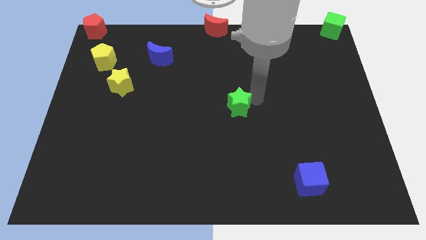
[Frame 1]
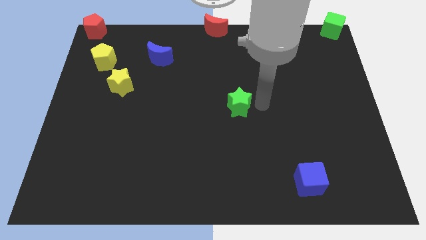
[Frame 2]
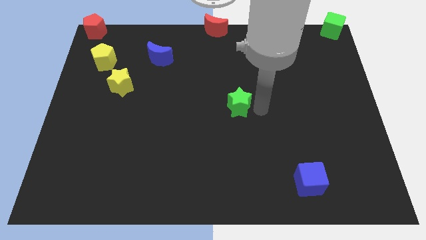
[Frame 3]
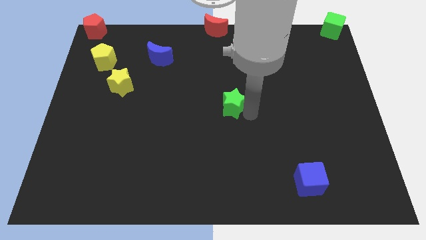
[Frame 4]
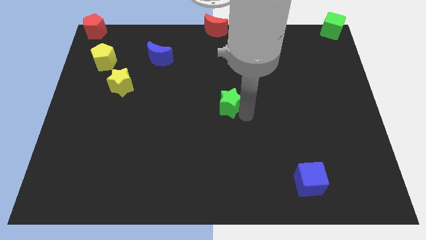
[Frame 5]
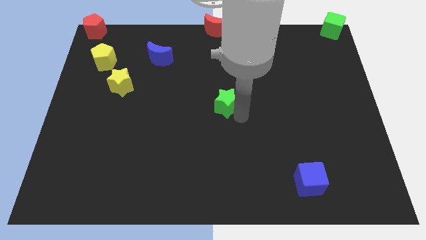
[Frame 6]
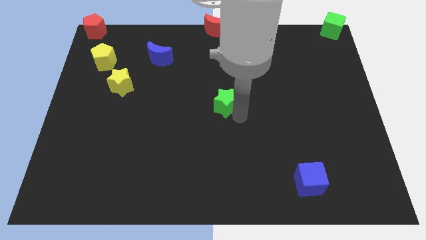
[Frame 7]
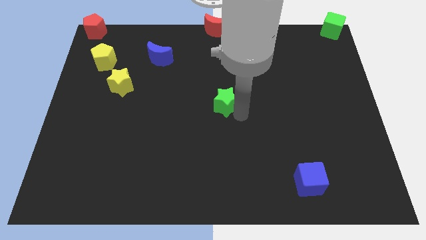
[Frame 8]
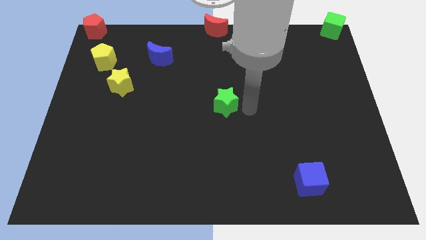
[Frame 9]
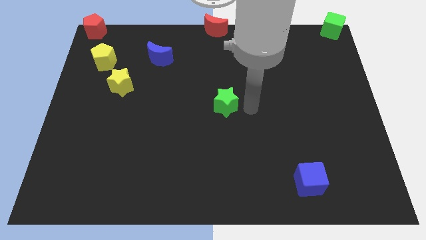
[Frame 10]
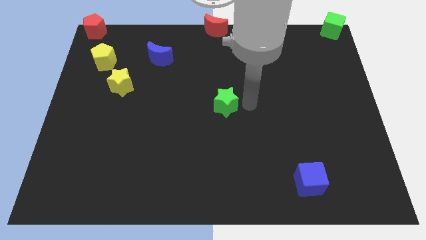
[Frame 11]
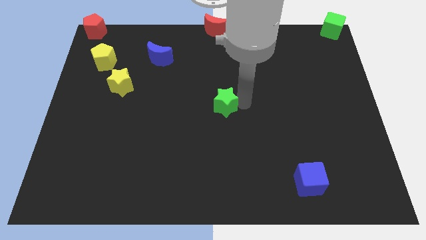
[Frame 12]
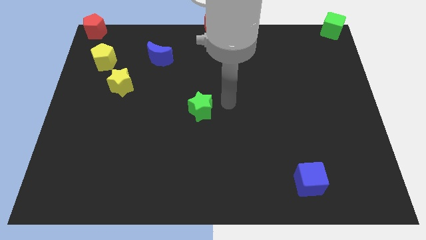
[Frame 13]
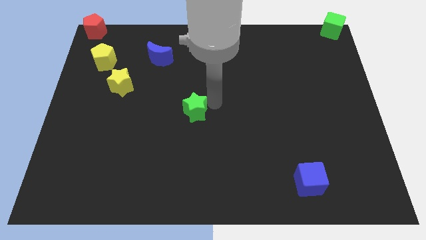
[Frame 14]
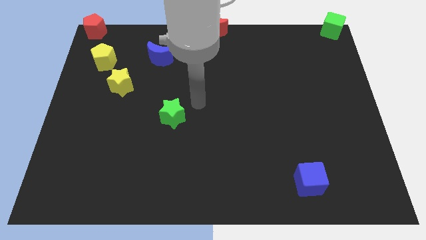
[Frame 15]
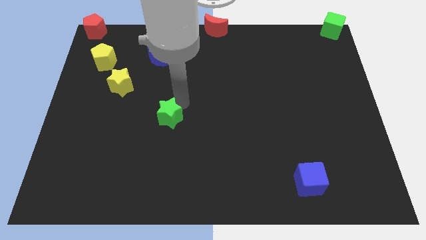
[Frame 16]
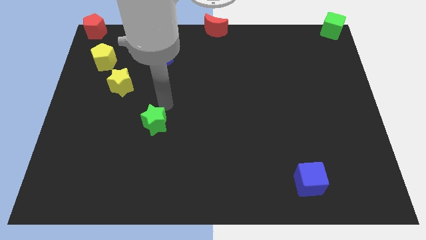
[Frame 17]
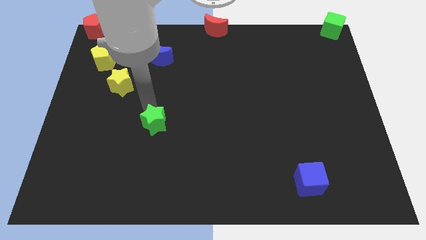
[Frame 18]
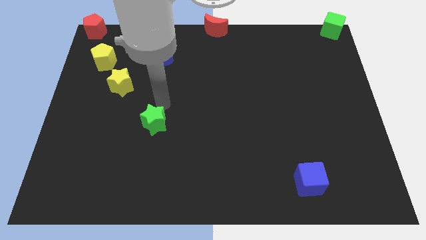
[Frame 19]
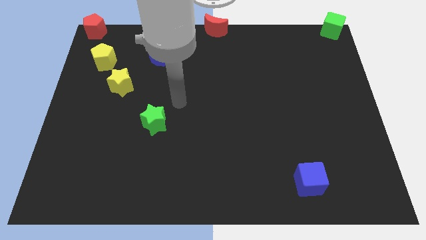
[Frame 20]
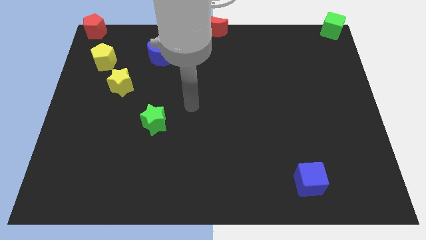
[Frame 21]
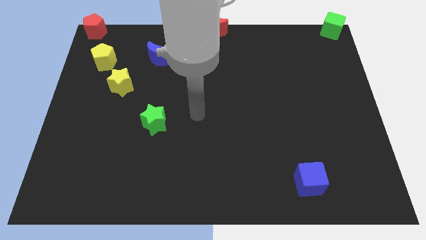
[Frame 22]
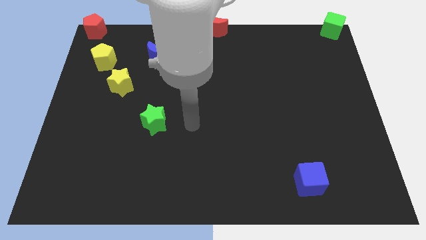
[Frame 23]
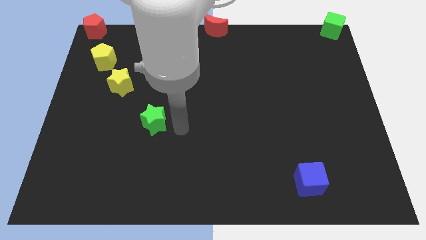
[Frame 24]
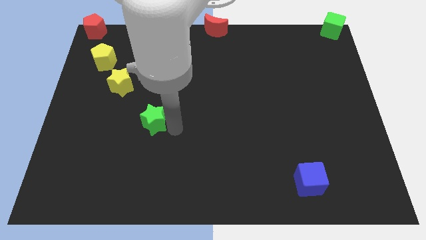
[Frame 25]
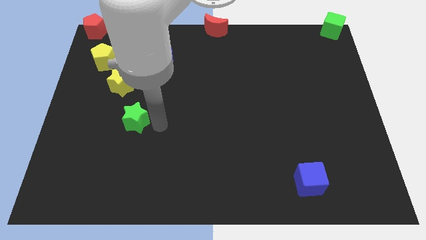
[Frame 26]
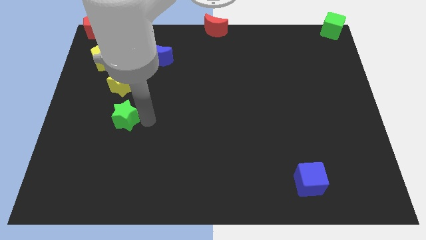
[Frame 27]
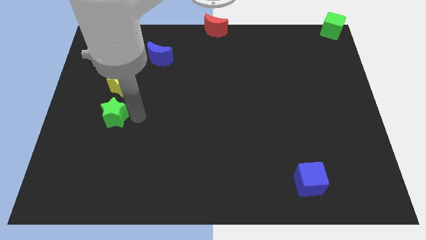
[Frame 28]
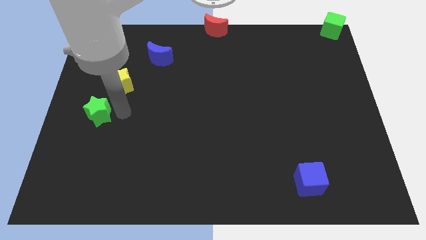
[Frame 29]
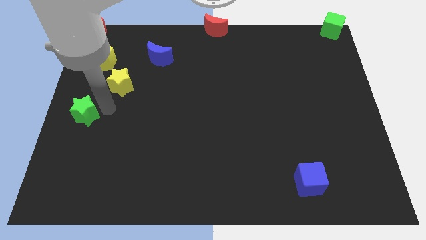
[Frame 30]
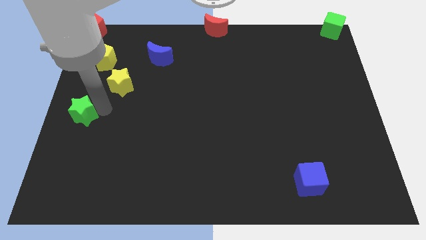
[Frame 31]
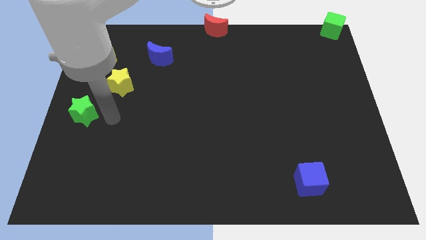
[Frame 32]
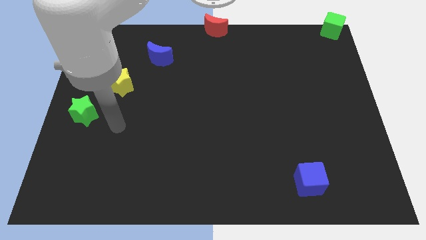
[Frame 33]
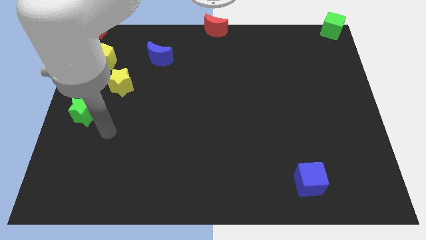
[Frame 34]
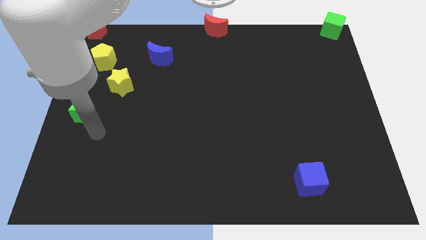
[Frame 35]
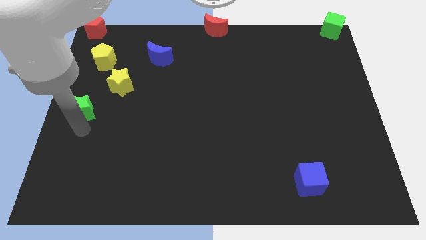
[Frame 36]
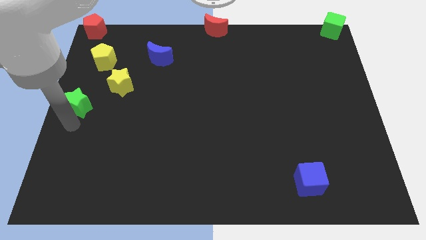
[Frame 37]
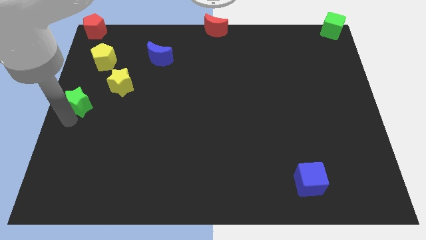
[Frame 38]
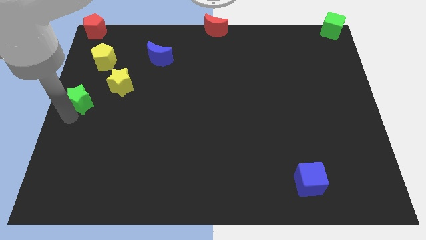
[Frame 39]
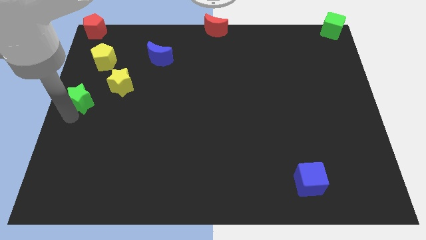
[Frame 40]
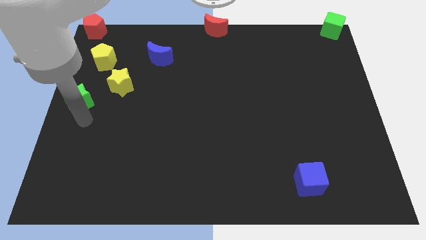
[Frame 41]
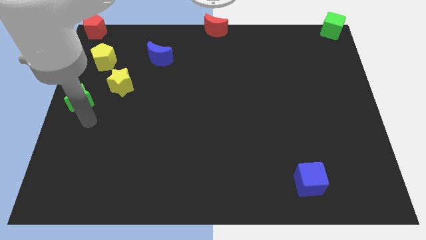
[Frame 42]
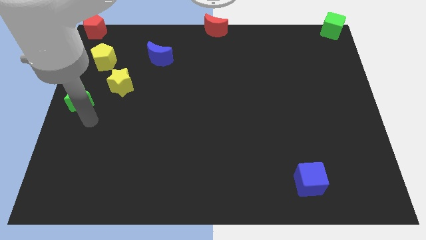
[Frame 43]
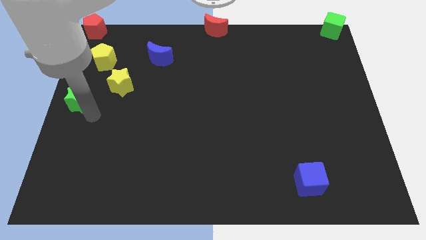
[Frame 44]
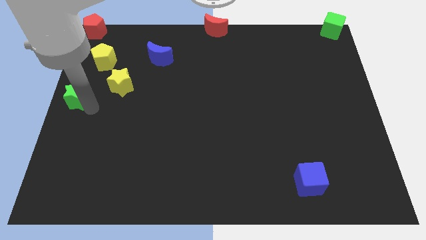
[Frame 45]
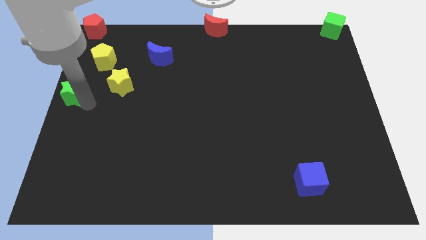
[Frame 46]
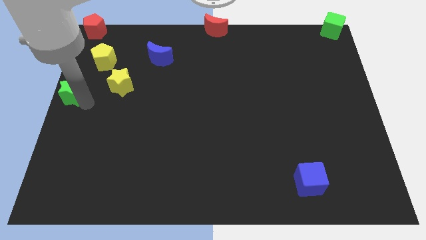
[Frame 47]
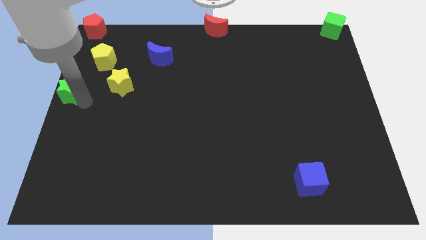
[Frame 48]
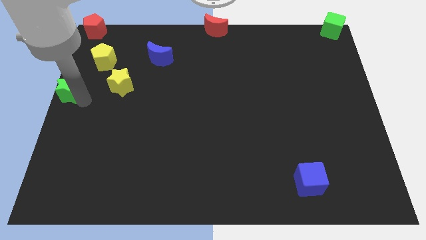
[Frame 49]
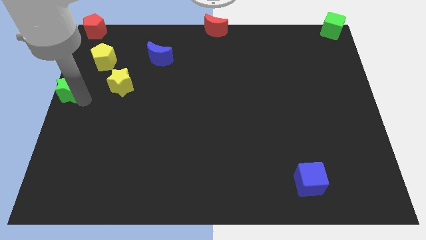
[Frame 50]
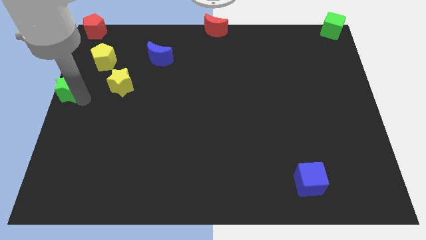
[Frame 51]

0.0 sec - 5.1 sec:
move the green star towards the left center of the board

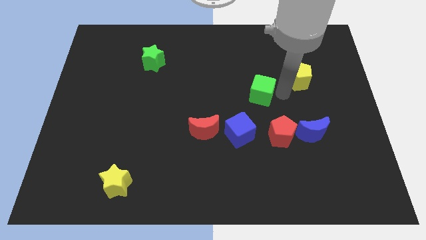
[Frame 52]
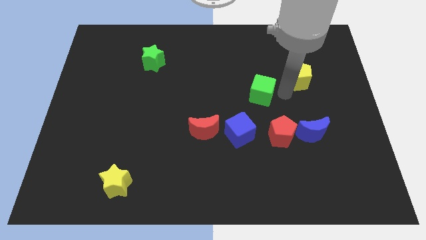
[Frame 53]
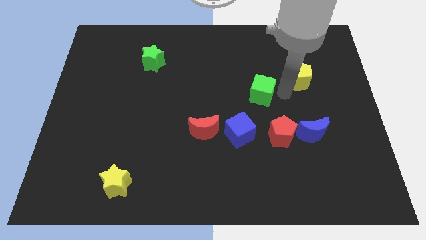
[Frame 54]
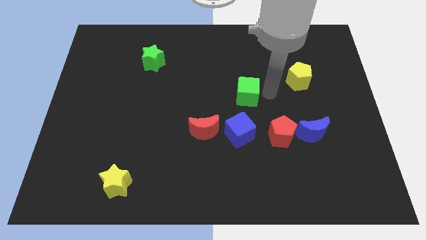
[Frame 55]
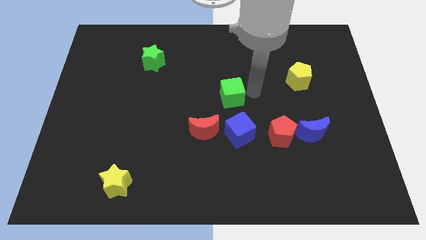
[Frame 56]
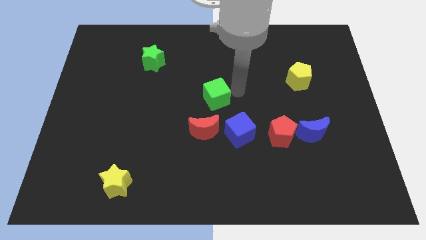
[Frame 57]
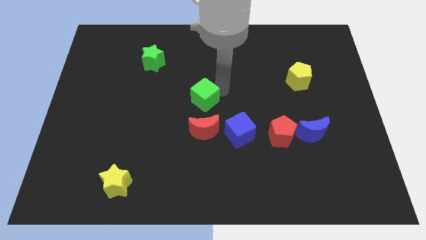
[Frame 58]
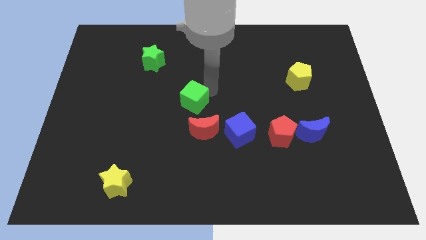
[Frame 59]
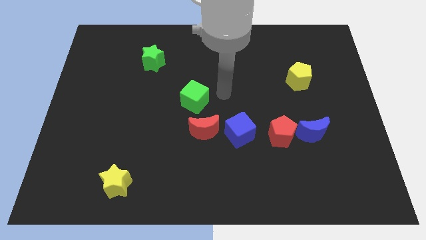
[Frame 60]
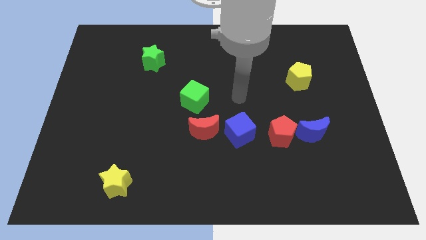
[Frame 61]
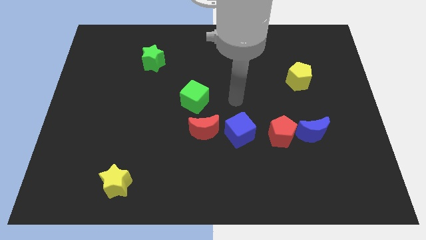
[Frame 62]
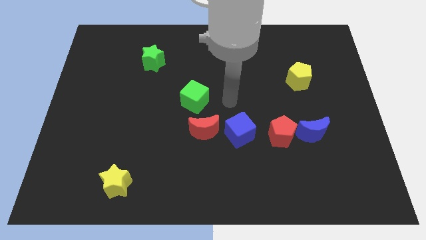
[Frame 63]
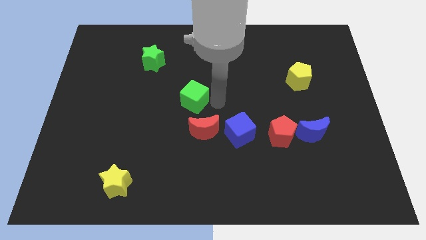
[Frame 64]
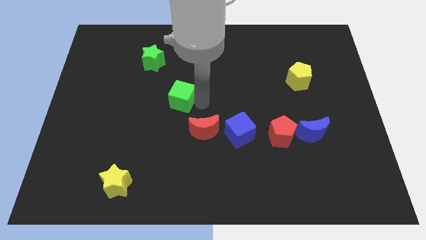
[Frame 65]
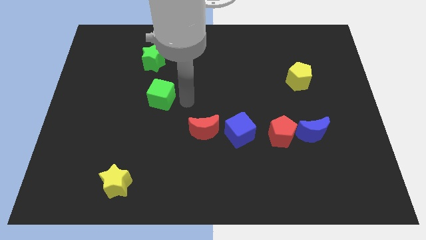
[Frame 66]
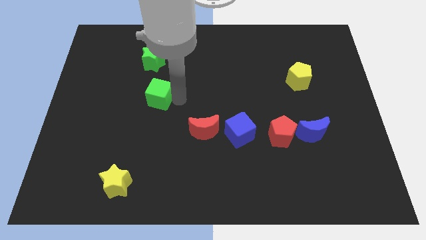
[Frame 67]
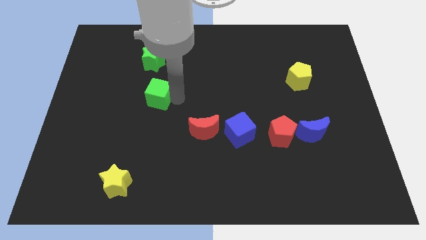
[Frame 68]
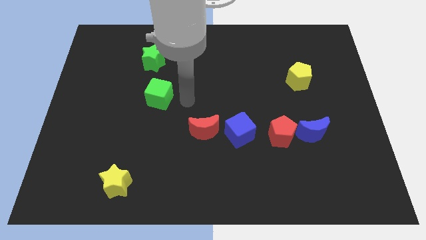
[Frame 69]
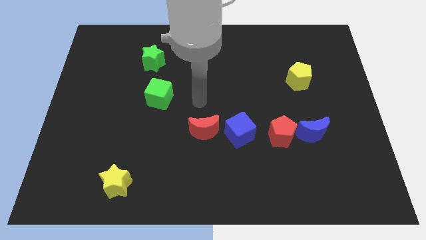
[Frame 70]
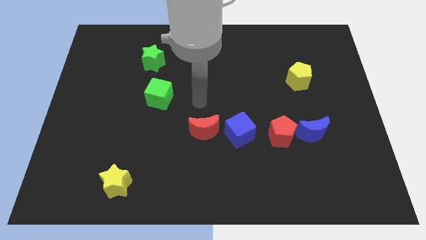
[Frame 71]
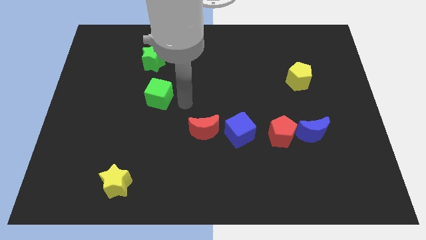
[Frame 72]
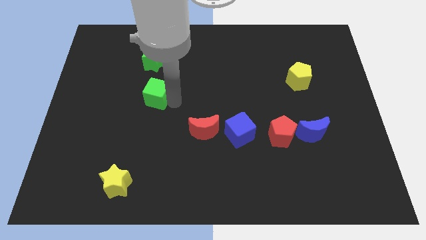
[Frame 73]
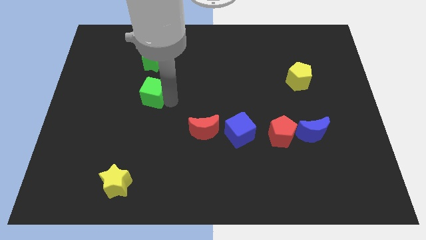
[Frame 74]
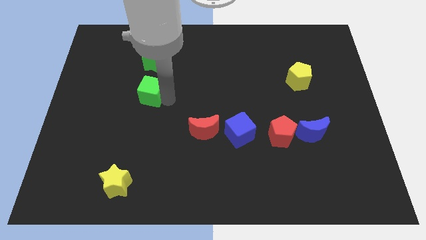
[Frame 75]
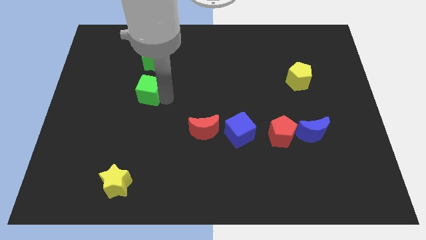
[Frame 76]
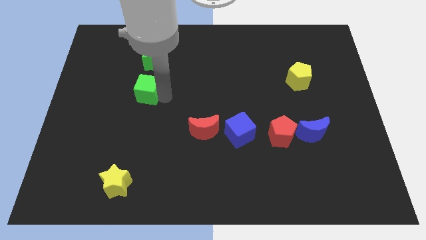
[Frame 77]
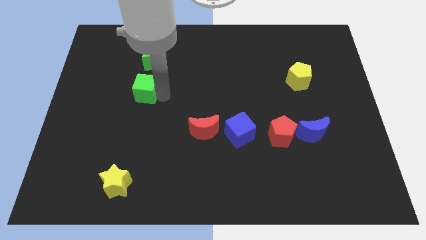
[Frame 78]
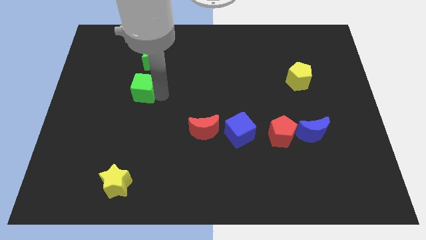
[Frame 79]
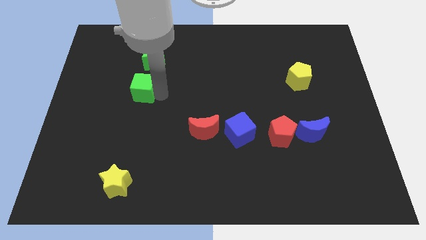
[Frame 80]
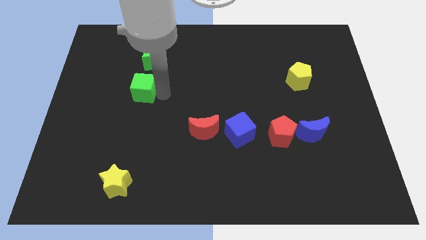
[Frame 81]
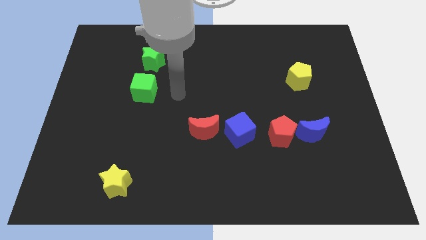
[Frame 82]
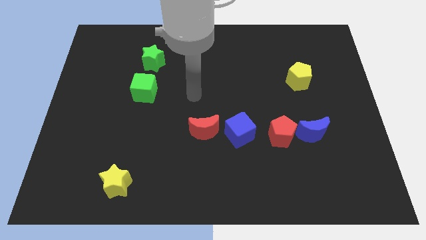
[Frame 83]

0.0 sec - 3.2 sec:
place green cube below green star

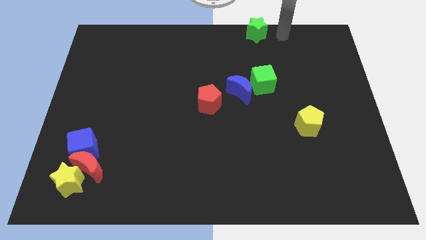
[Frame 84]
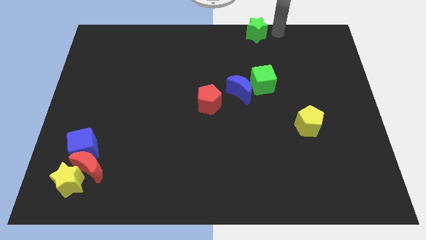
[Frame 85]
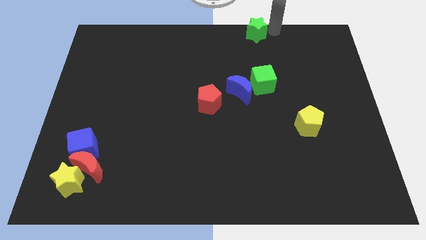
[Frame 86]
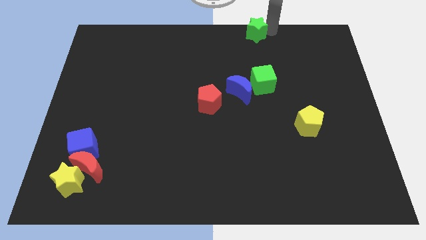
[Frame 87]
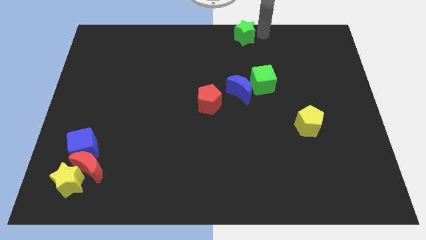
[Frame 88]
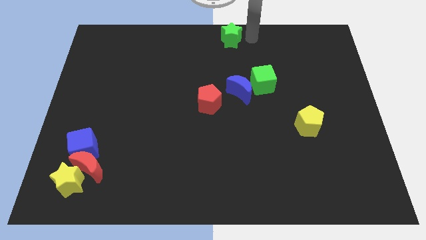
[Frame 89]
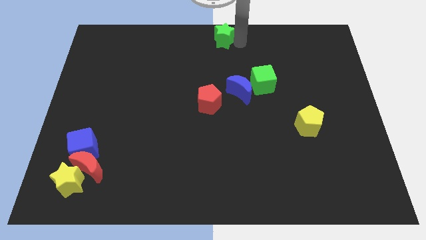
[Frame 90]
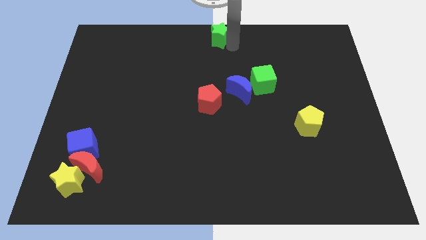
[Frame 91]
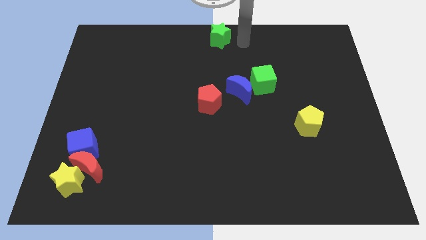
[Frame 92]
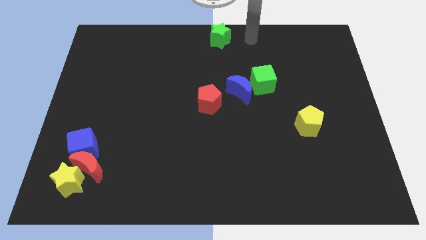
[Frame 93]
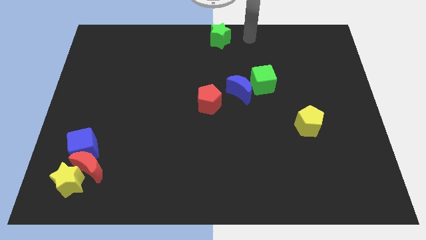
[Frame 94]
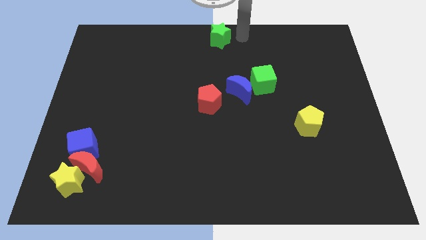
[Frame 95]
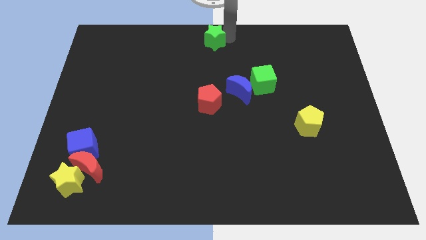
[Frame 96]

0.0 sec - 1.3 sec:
push the green star to the top of the red pentagon
